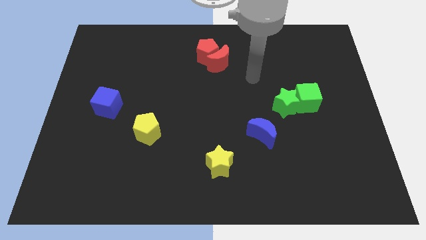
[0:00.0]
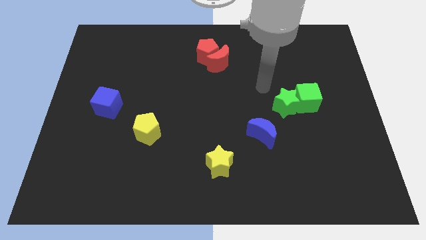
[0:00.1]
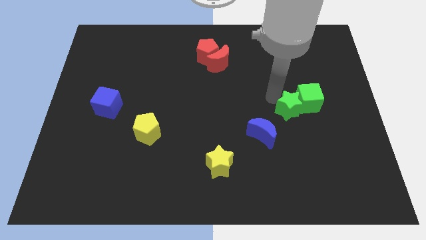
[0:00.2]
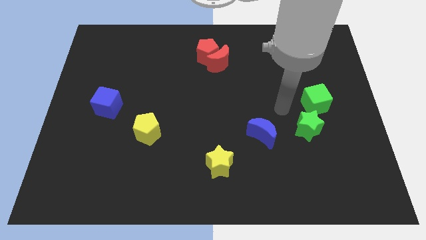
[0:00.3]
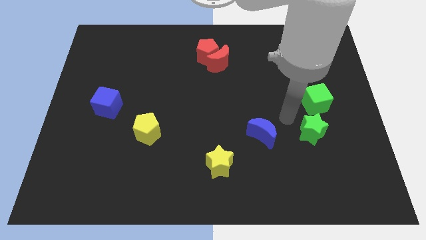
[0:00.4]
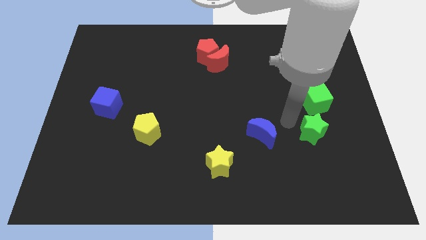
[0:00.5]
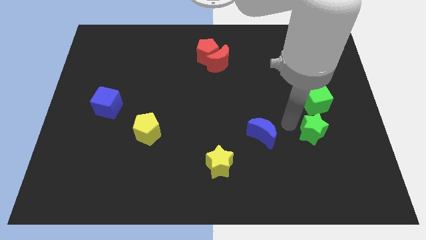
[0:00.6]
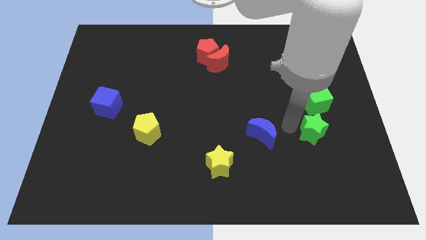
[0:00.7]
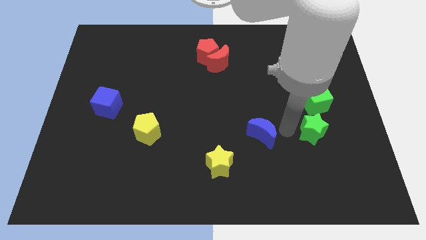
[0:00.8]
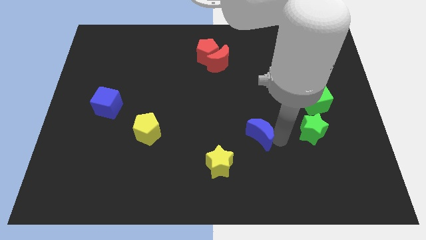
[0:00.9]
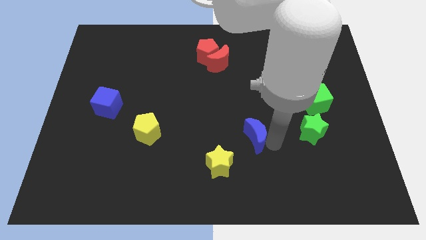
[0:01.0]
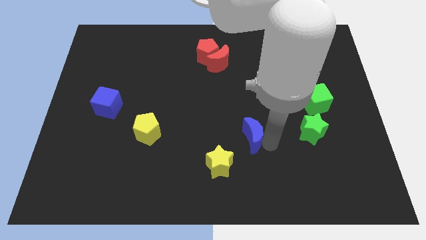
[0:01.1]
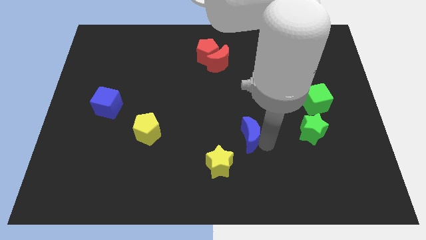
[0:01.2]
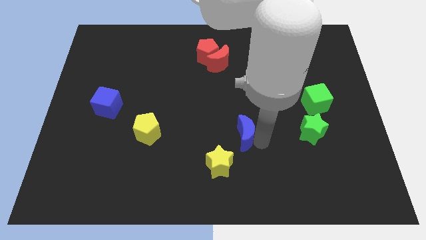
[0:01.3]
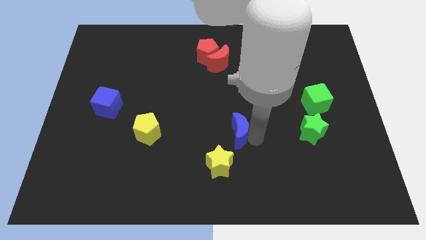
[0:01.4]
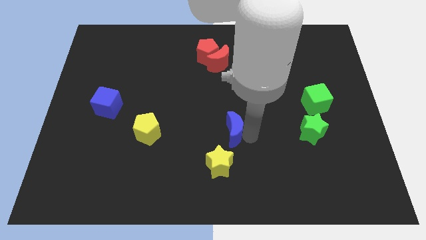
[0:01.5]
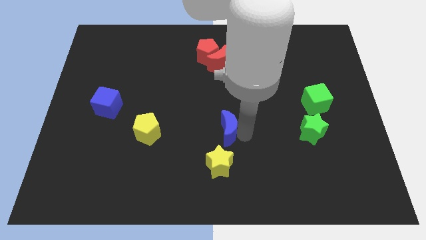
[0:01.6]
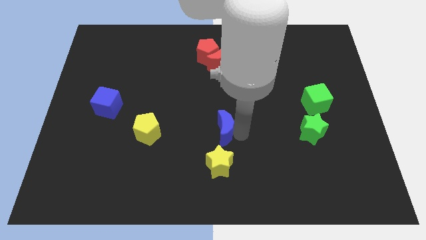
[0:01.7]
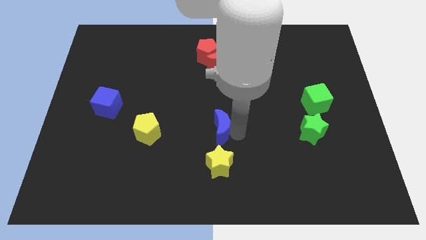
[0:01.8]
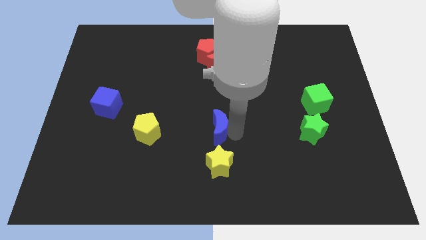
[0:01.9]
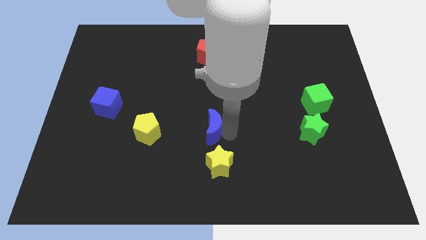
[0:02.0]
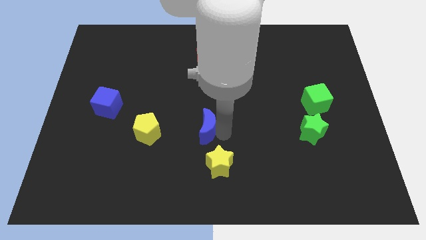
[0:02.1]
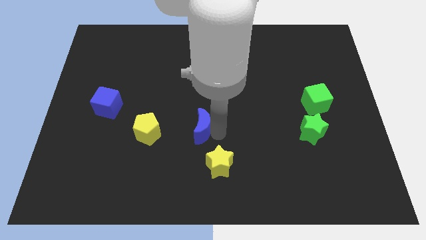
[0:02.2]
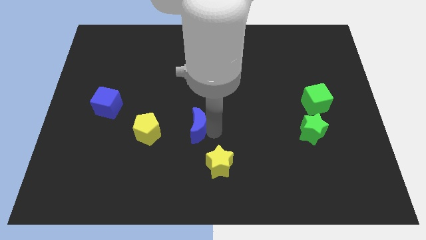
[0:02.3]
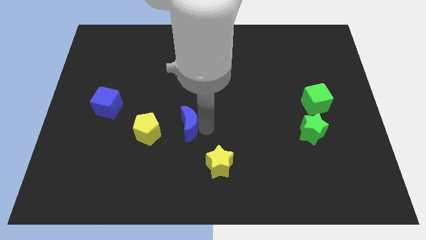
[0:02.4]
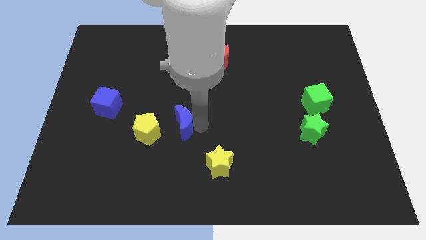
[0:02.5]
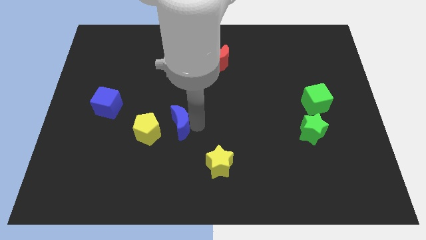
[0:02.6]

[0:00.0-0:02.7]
push blue moon towards yellow pentagon

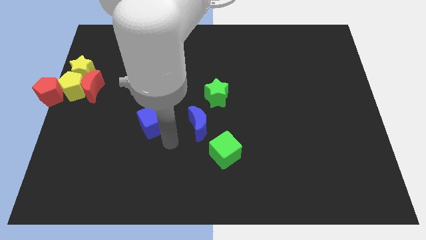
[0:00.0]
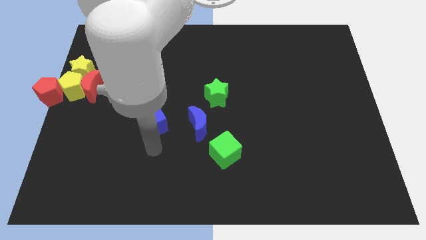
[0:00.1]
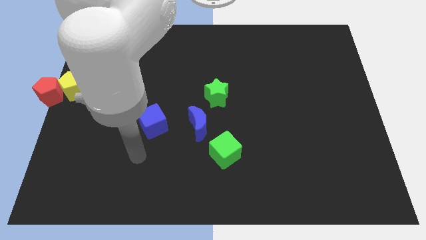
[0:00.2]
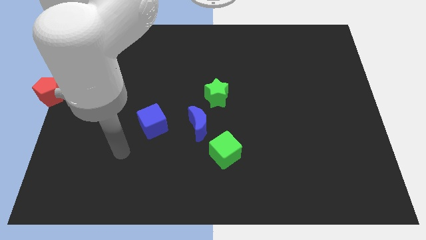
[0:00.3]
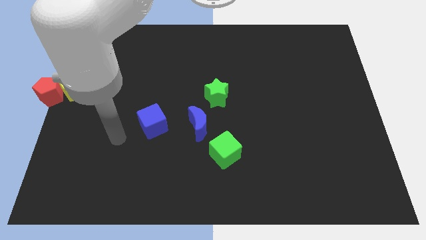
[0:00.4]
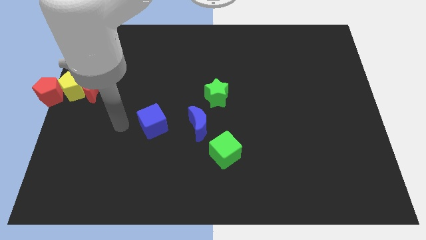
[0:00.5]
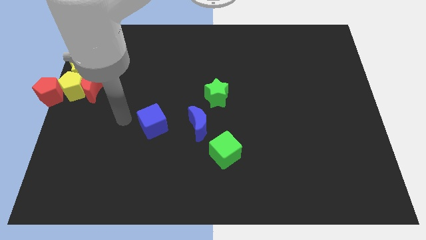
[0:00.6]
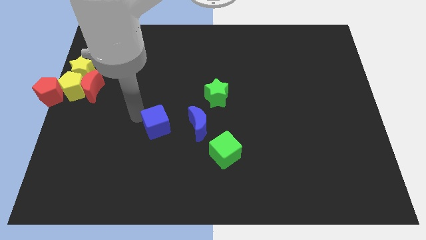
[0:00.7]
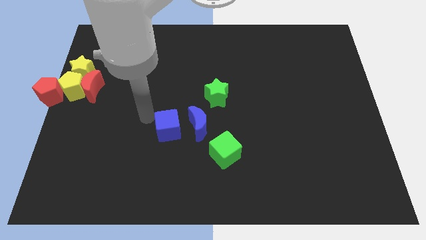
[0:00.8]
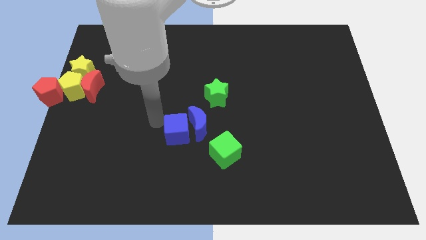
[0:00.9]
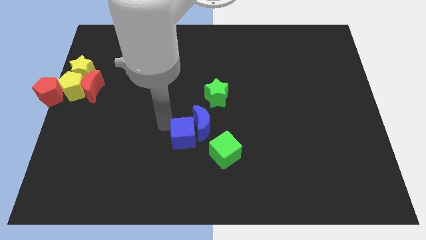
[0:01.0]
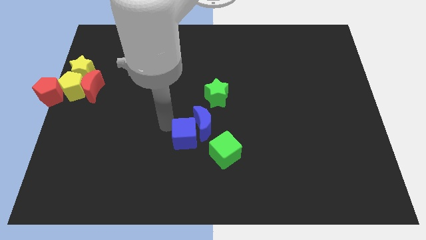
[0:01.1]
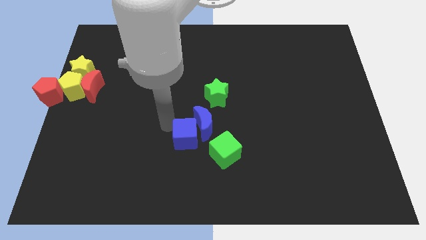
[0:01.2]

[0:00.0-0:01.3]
push the blue cube into the blue moon

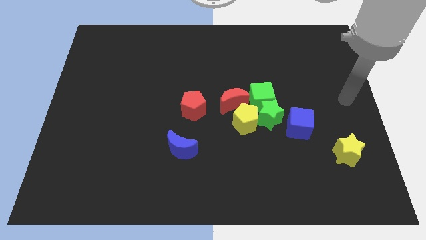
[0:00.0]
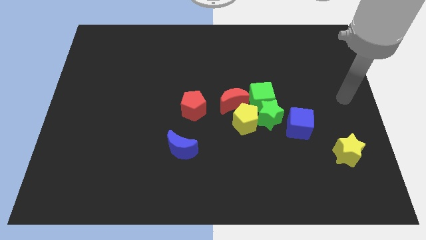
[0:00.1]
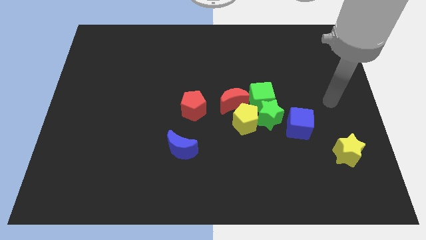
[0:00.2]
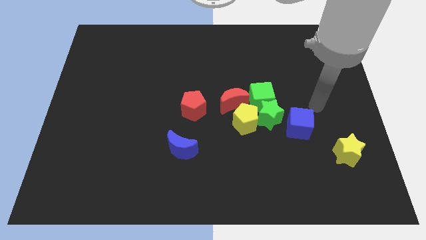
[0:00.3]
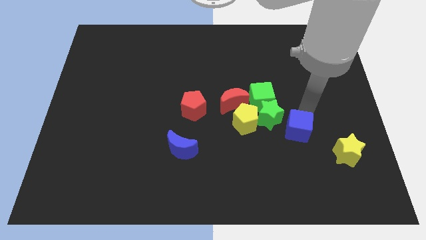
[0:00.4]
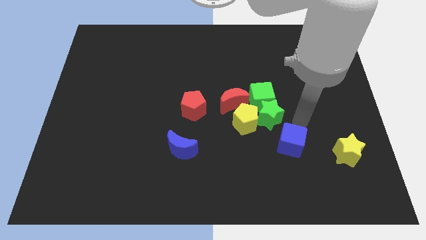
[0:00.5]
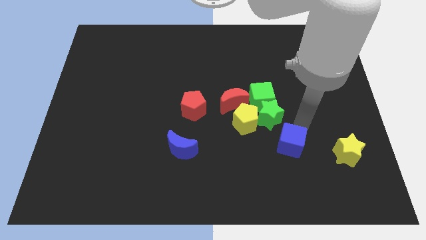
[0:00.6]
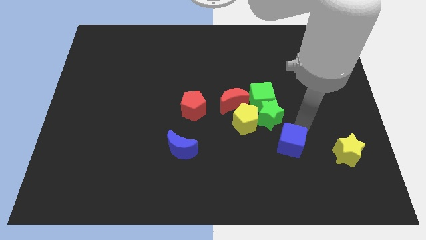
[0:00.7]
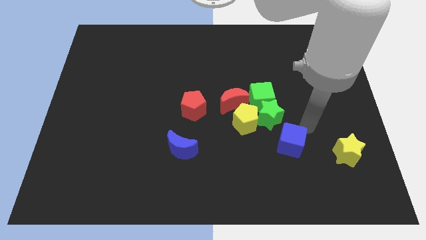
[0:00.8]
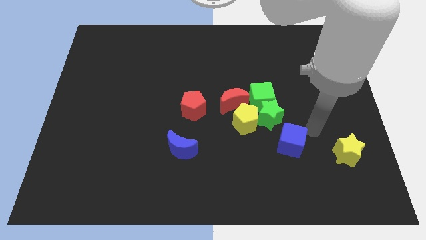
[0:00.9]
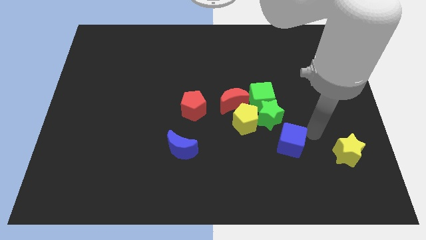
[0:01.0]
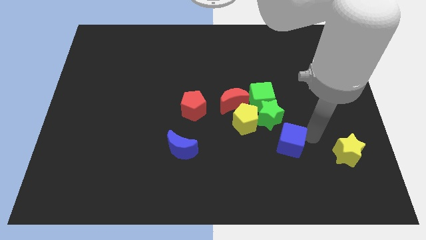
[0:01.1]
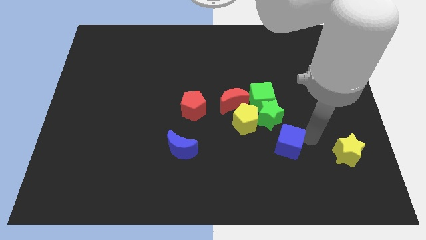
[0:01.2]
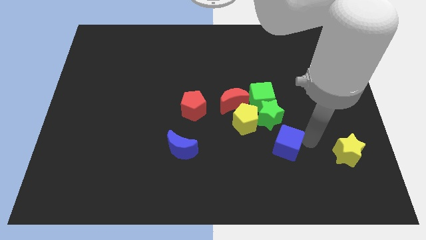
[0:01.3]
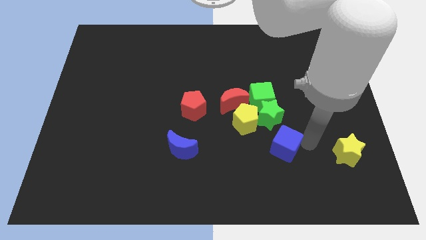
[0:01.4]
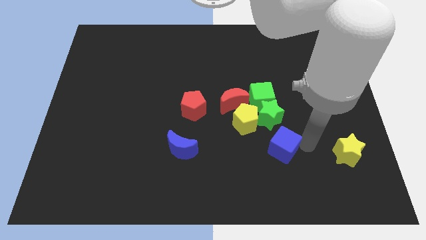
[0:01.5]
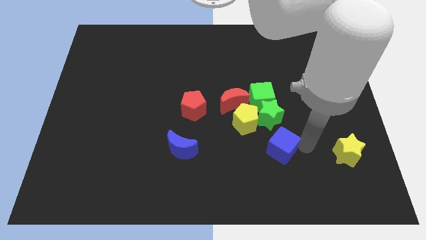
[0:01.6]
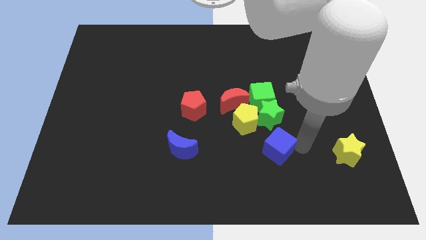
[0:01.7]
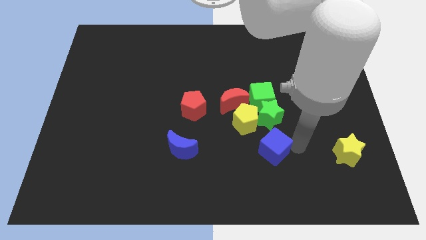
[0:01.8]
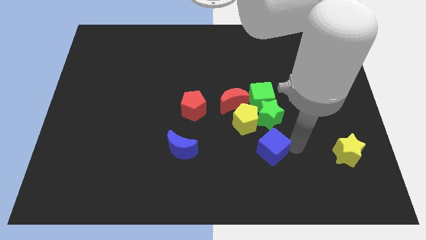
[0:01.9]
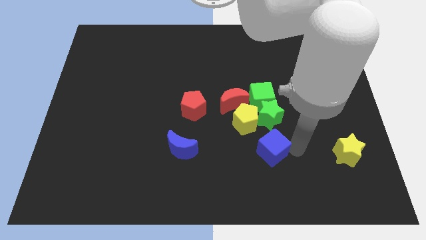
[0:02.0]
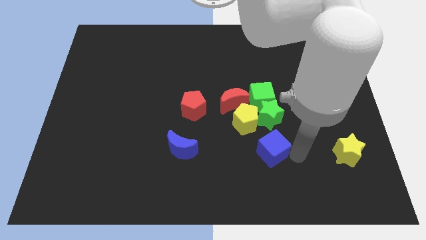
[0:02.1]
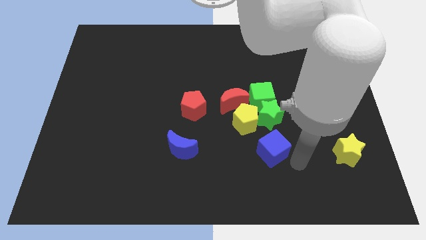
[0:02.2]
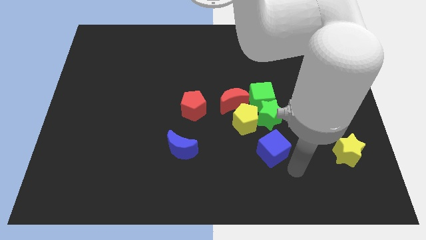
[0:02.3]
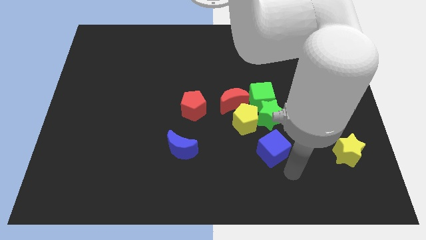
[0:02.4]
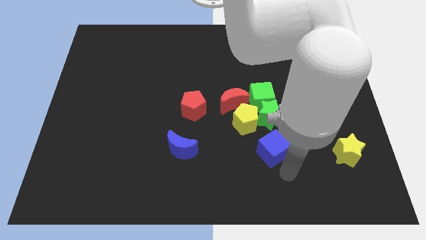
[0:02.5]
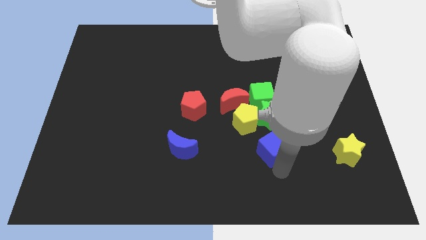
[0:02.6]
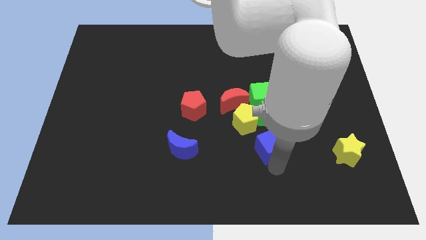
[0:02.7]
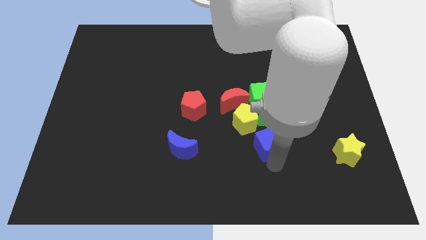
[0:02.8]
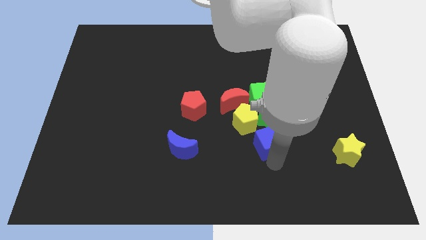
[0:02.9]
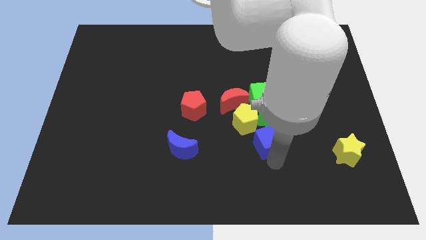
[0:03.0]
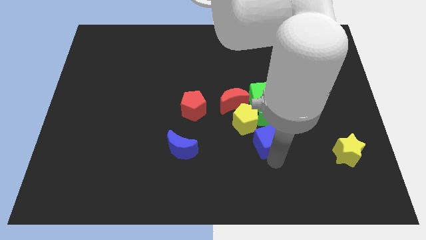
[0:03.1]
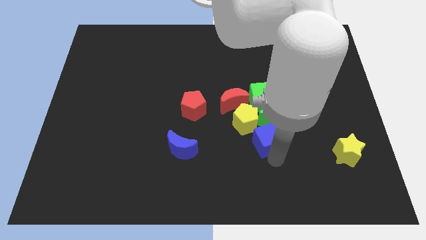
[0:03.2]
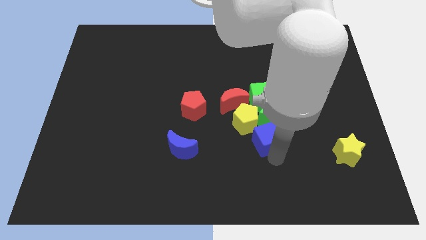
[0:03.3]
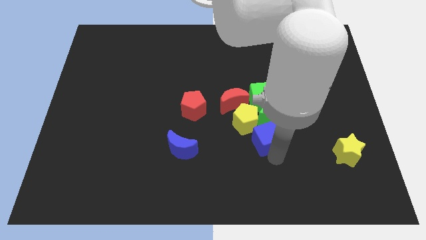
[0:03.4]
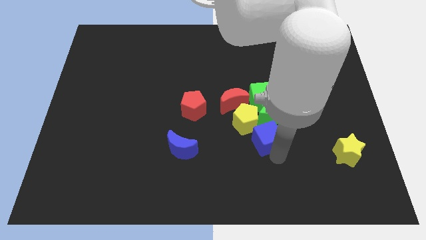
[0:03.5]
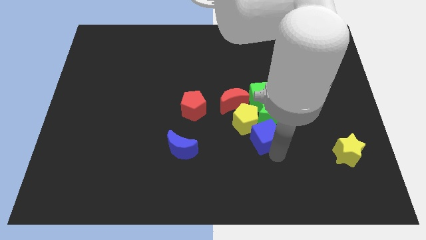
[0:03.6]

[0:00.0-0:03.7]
place the blue cube below the yellow pentagon and the green star

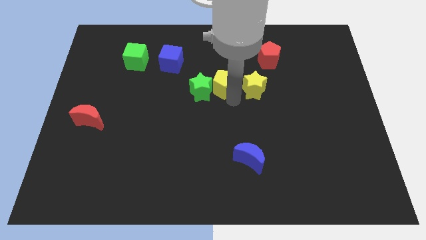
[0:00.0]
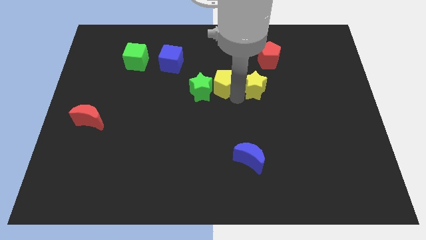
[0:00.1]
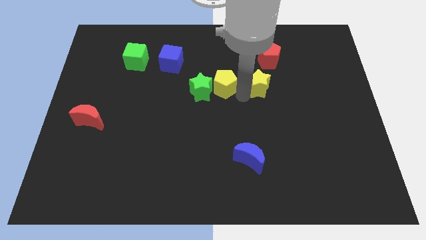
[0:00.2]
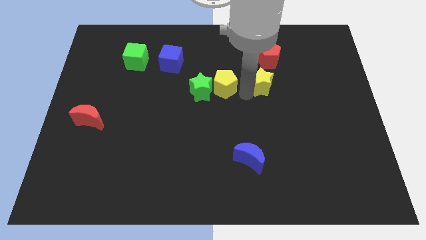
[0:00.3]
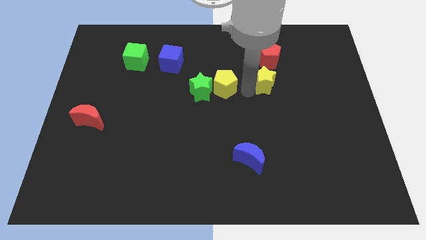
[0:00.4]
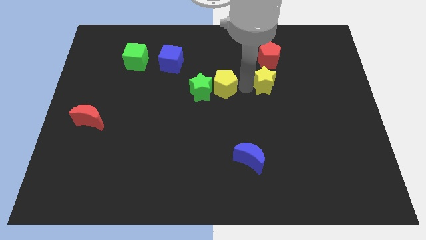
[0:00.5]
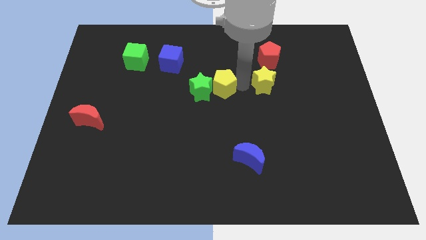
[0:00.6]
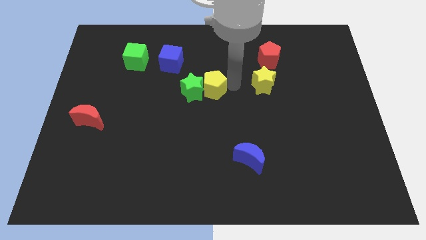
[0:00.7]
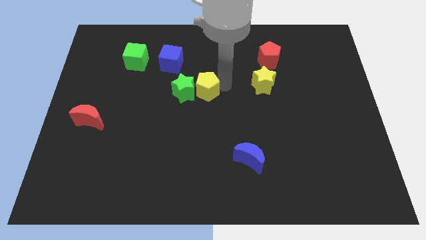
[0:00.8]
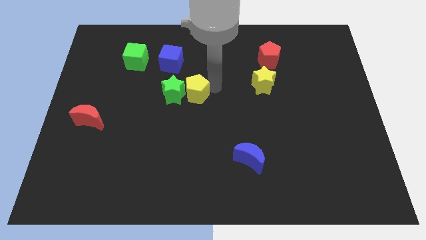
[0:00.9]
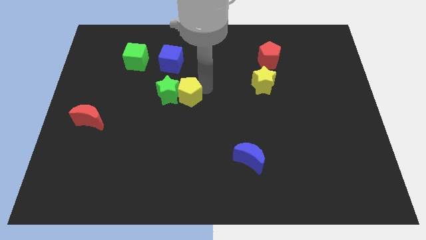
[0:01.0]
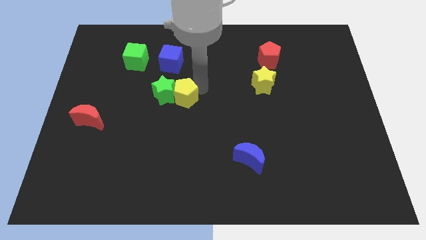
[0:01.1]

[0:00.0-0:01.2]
separate the yellow star from the yellow pentagon
